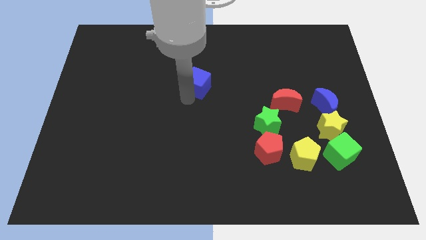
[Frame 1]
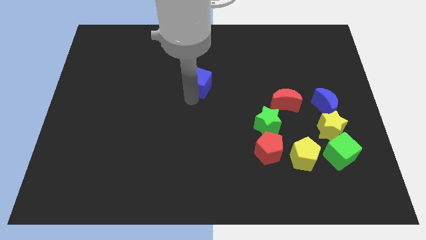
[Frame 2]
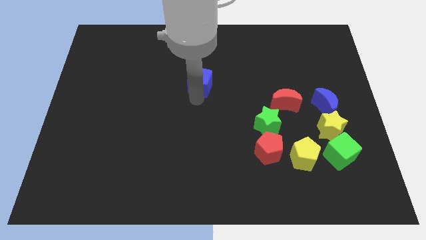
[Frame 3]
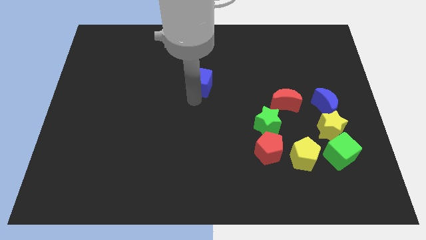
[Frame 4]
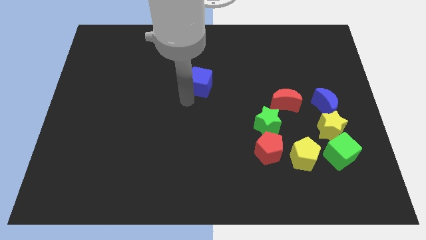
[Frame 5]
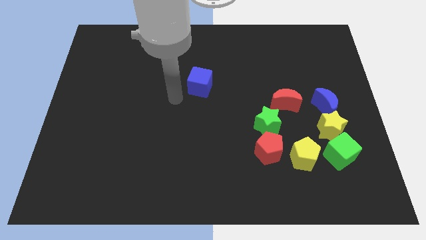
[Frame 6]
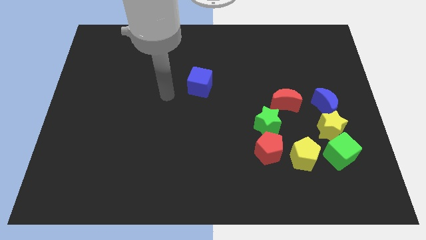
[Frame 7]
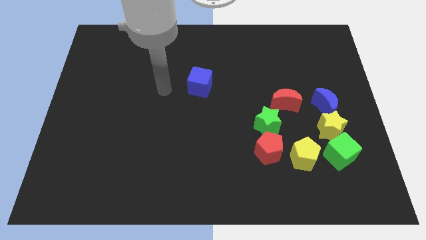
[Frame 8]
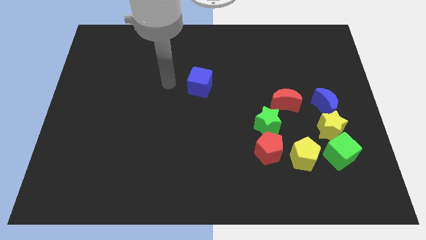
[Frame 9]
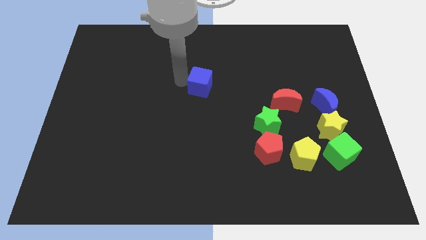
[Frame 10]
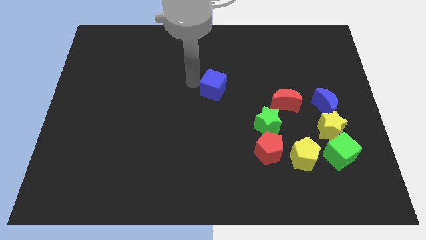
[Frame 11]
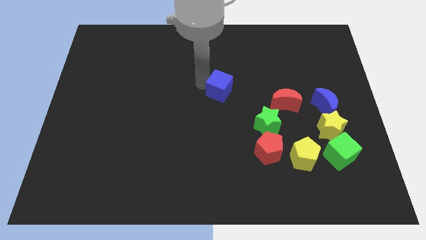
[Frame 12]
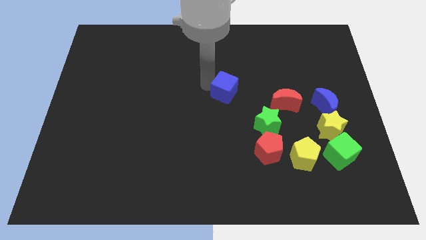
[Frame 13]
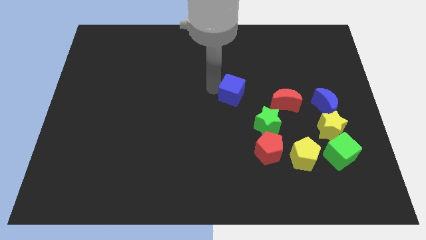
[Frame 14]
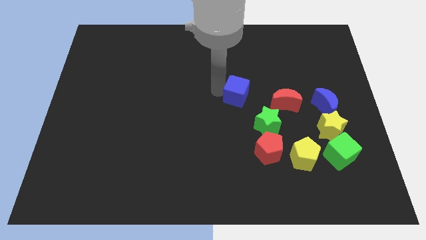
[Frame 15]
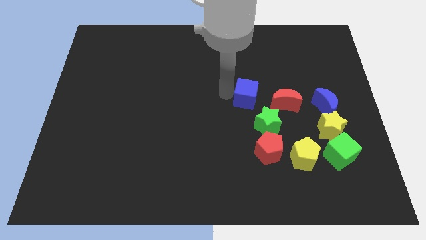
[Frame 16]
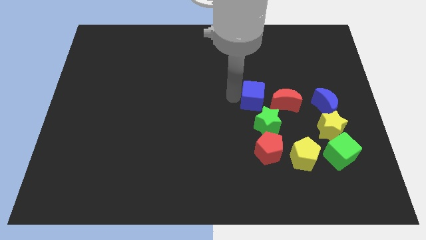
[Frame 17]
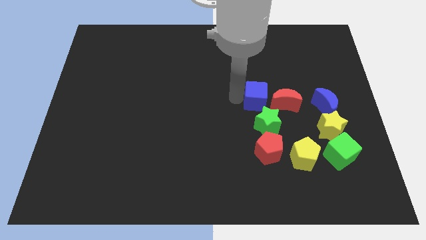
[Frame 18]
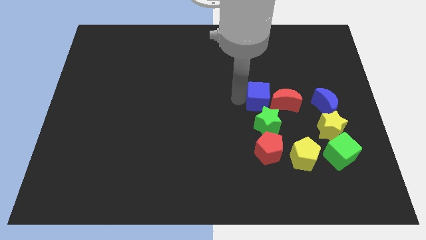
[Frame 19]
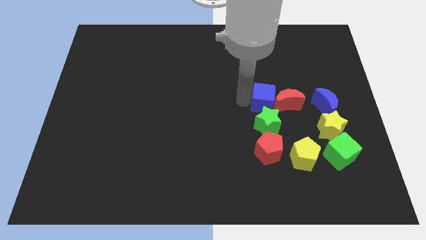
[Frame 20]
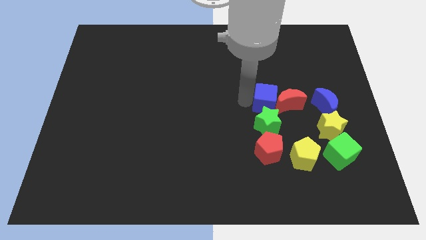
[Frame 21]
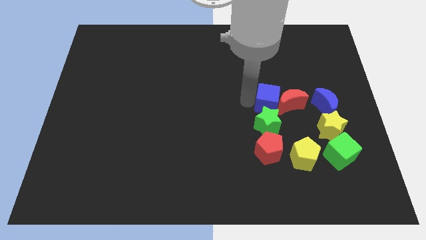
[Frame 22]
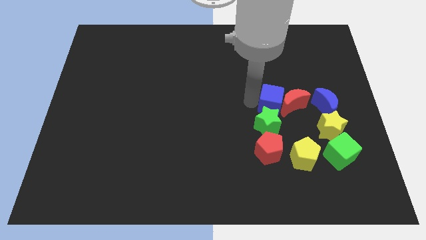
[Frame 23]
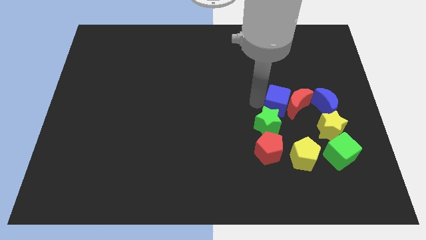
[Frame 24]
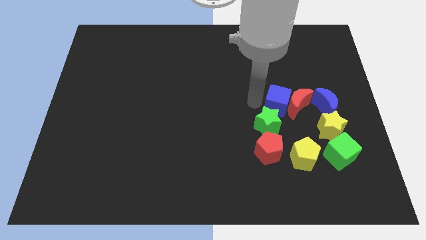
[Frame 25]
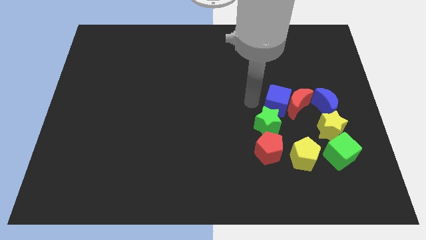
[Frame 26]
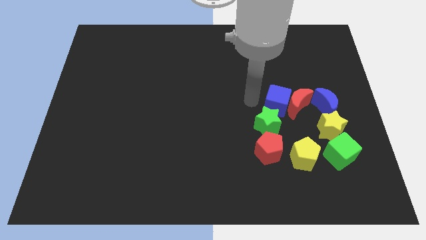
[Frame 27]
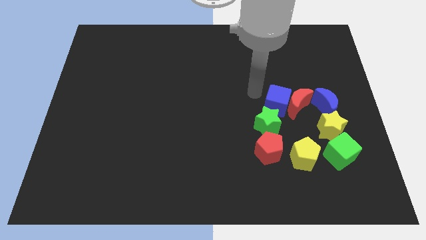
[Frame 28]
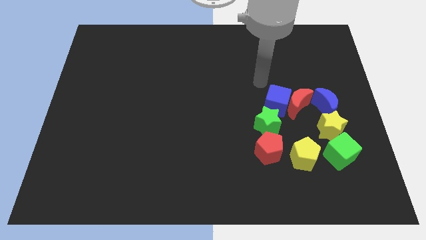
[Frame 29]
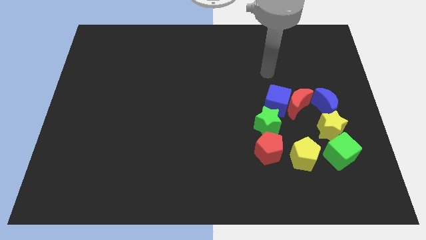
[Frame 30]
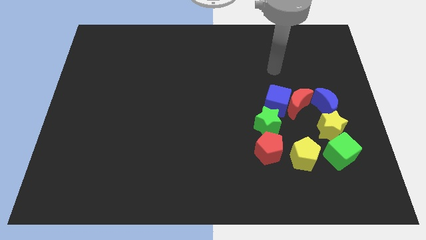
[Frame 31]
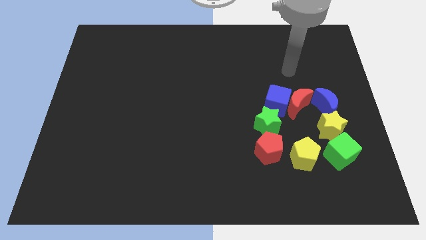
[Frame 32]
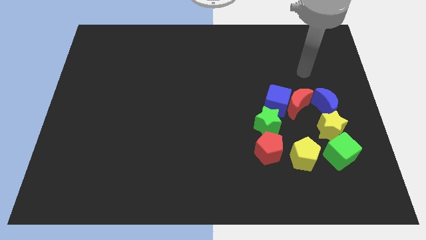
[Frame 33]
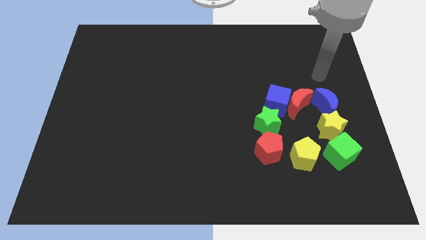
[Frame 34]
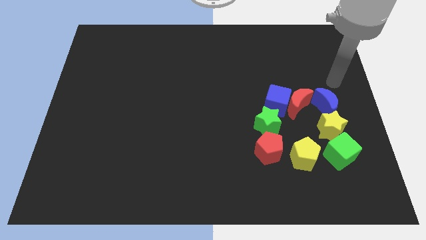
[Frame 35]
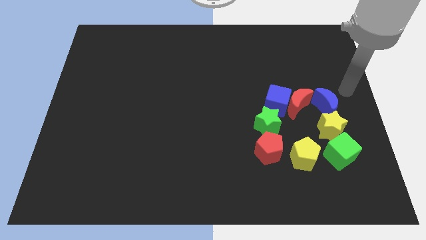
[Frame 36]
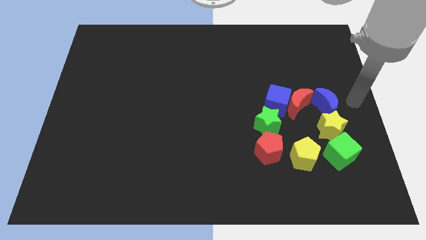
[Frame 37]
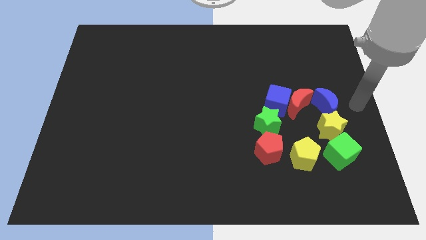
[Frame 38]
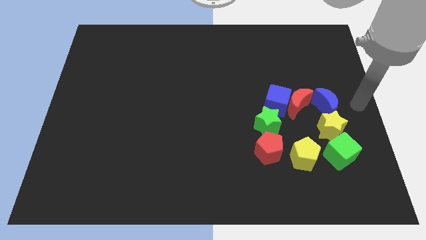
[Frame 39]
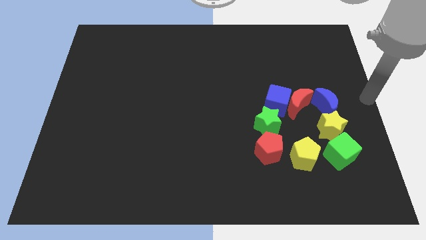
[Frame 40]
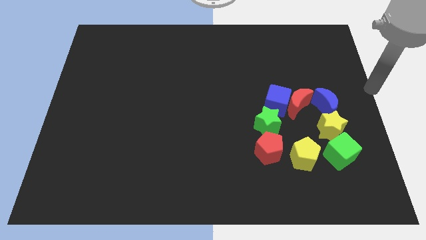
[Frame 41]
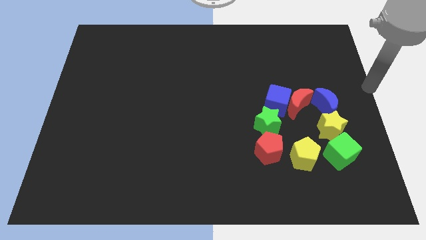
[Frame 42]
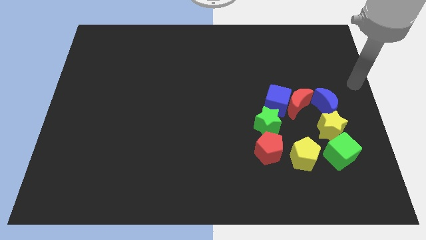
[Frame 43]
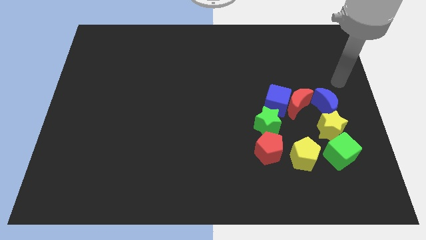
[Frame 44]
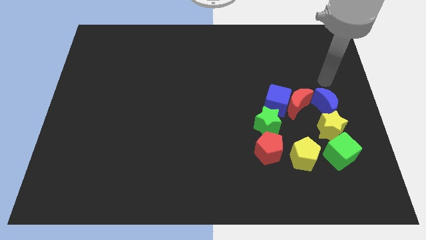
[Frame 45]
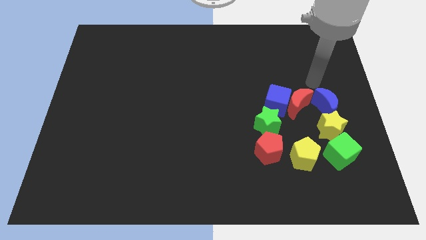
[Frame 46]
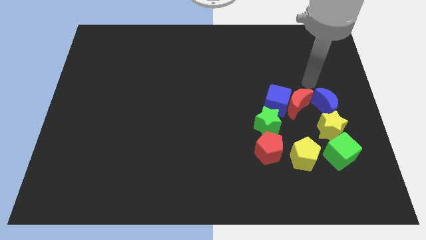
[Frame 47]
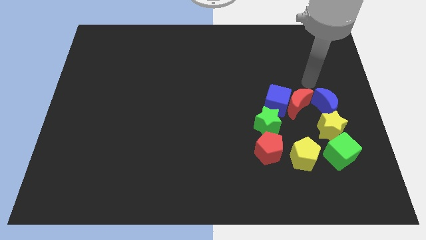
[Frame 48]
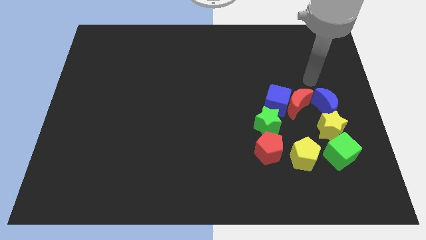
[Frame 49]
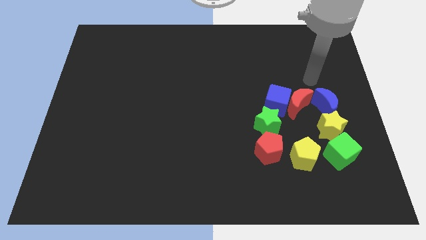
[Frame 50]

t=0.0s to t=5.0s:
move the blue cube between the red moon and green star

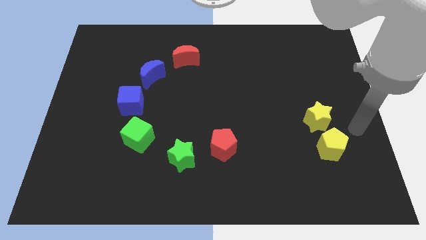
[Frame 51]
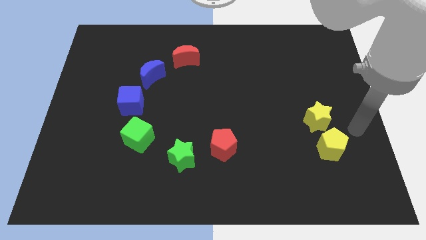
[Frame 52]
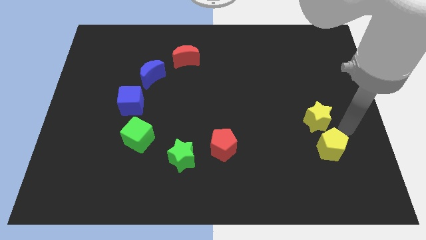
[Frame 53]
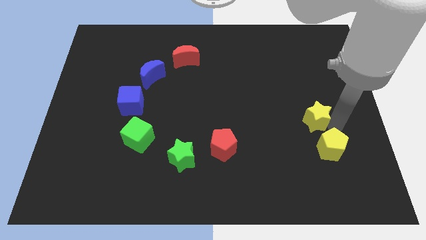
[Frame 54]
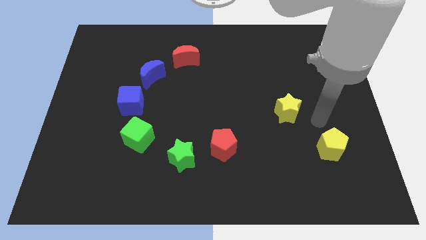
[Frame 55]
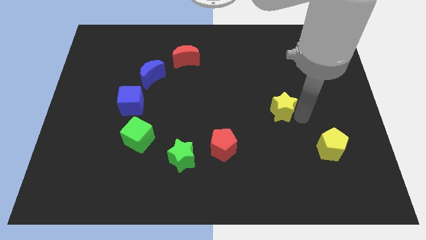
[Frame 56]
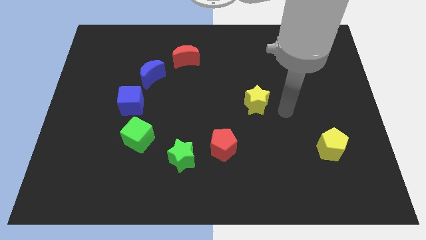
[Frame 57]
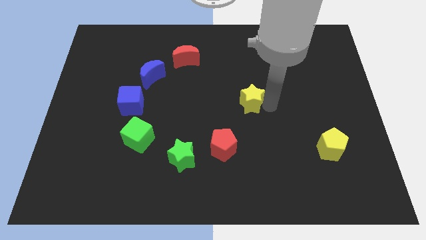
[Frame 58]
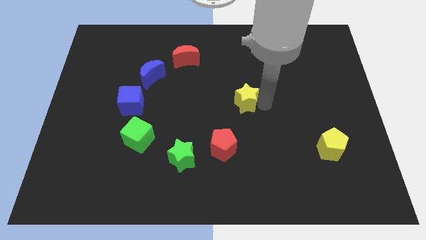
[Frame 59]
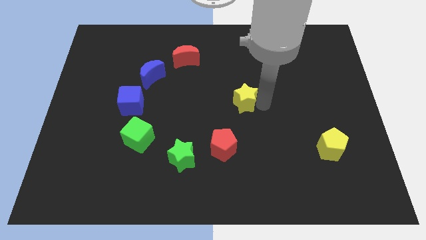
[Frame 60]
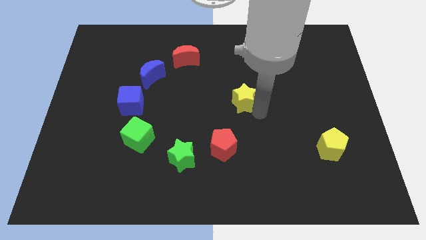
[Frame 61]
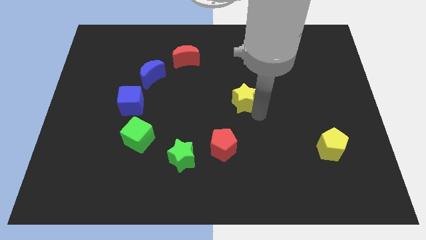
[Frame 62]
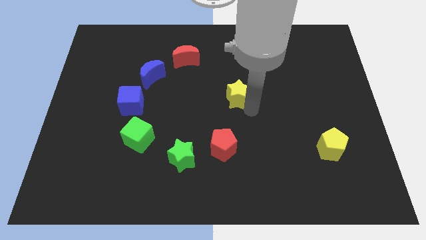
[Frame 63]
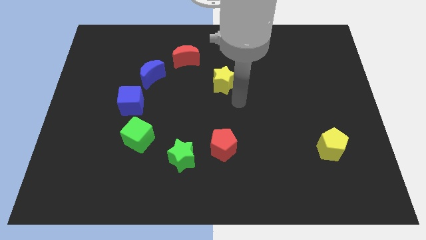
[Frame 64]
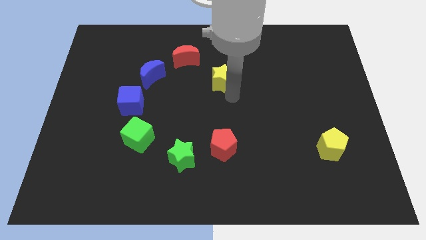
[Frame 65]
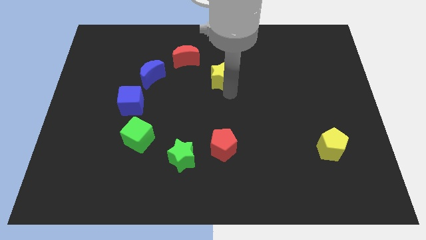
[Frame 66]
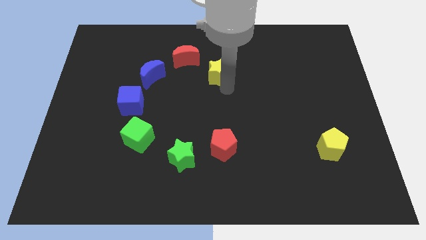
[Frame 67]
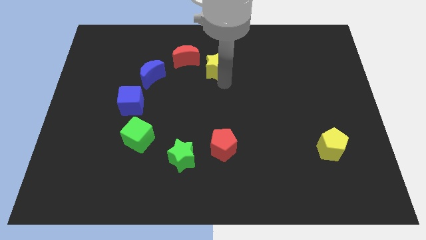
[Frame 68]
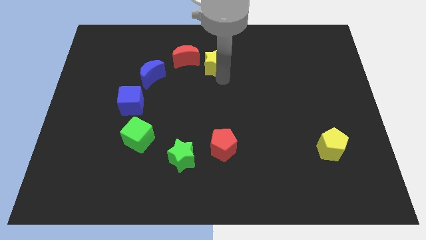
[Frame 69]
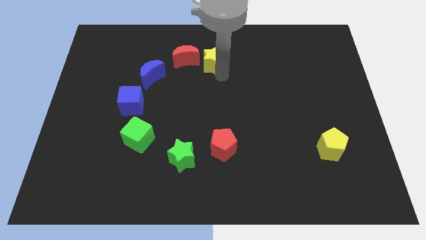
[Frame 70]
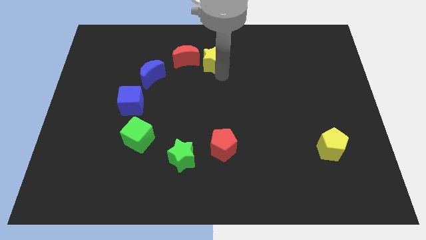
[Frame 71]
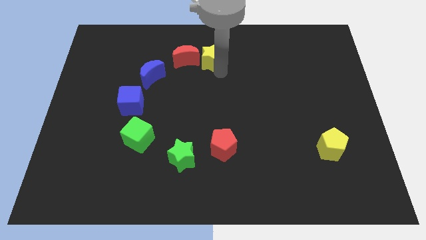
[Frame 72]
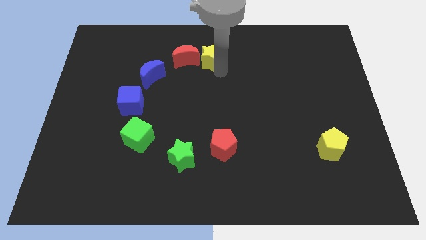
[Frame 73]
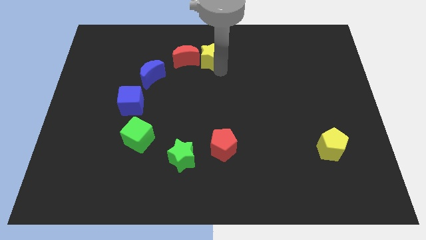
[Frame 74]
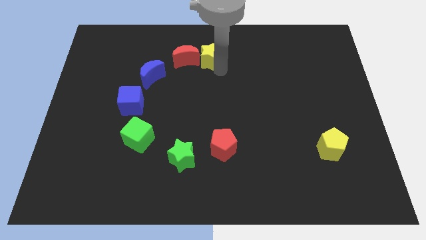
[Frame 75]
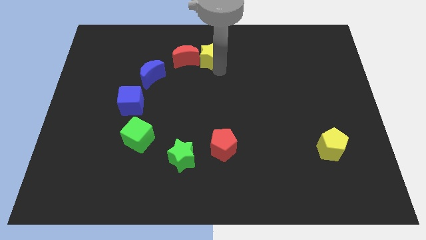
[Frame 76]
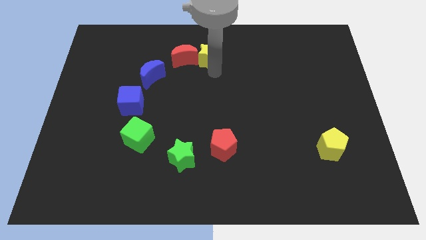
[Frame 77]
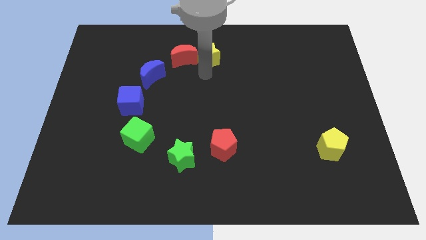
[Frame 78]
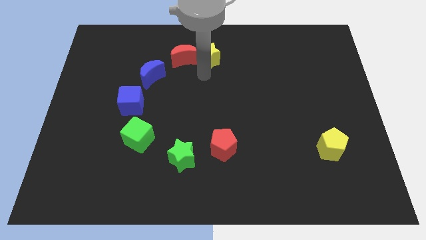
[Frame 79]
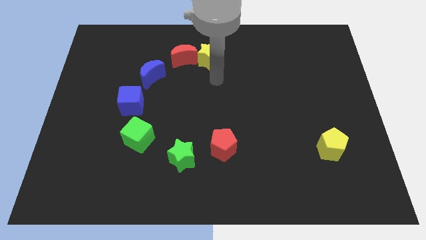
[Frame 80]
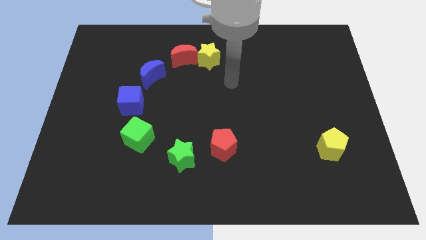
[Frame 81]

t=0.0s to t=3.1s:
add yellow star into red moon

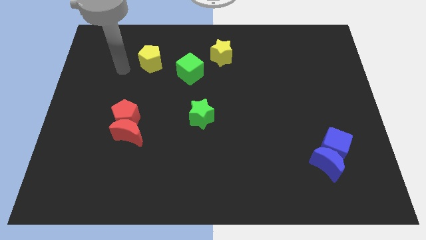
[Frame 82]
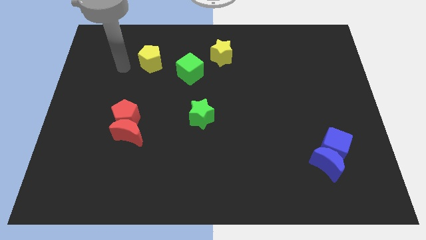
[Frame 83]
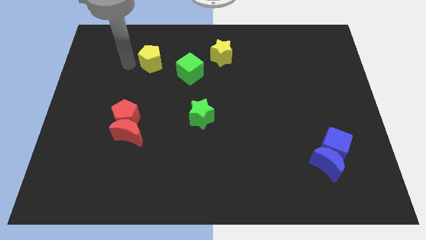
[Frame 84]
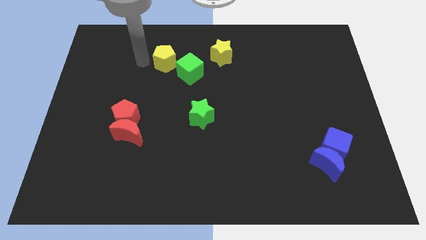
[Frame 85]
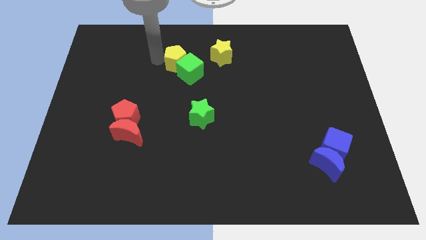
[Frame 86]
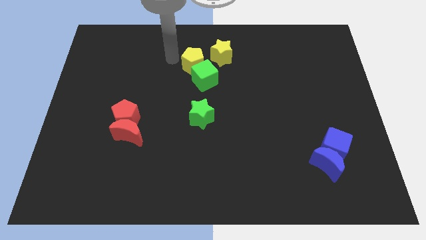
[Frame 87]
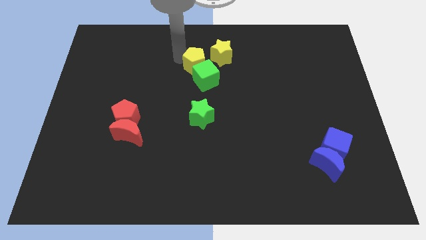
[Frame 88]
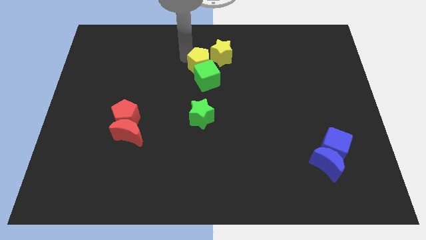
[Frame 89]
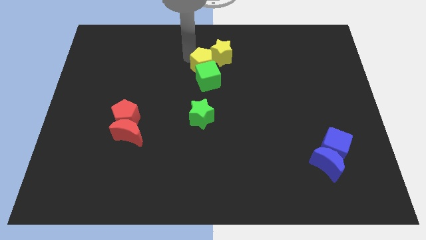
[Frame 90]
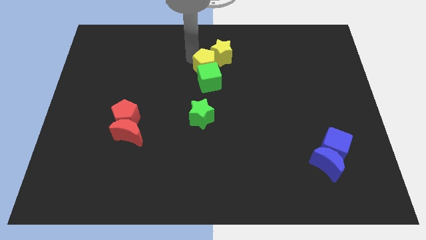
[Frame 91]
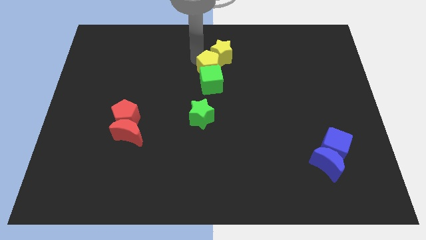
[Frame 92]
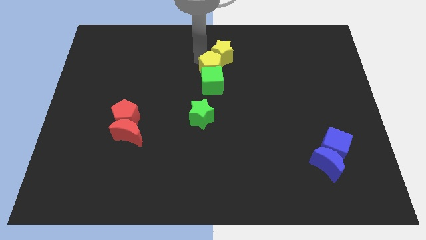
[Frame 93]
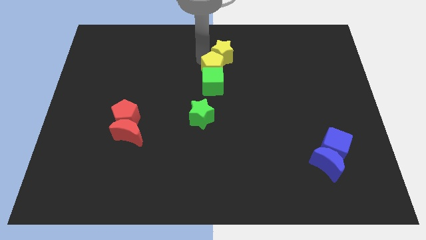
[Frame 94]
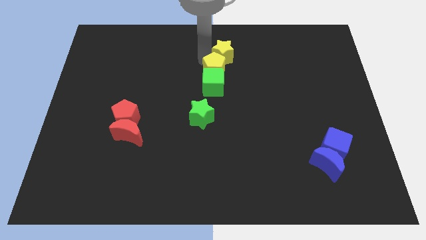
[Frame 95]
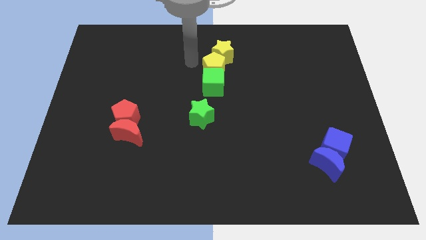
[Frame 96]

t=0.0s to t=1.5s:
place the green cube yellow pentagon in between the yellow and green star
